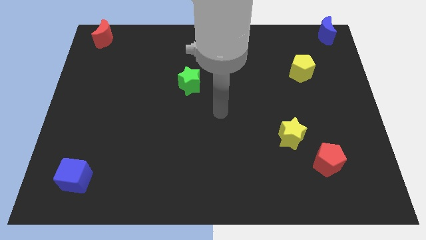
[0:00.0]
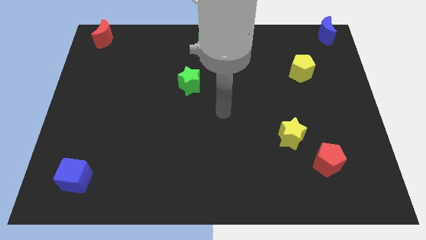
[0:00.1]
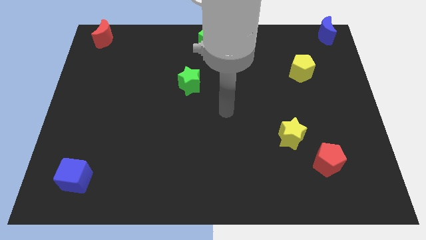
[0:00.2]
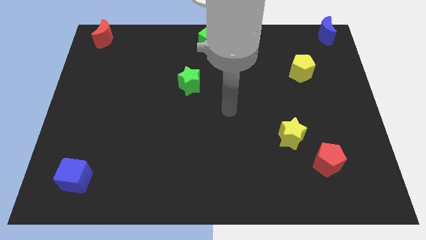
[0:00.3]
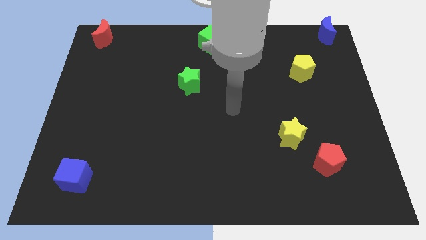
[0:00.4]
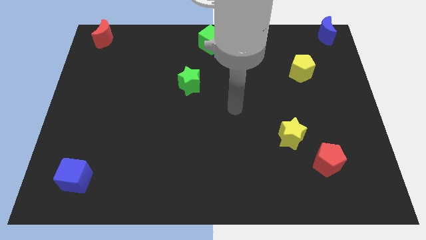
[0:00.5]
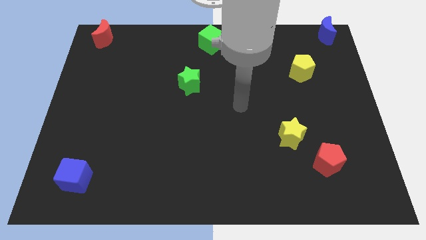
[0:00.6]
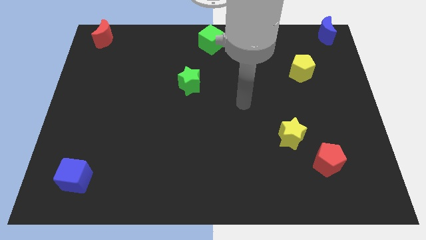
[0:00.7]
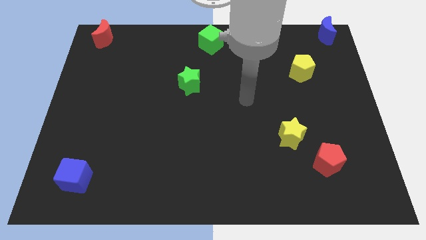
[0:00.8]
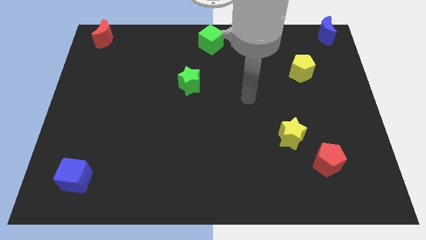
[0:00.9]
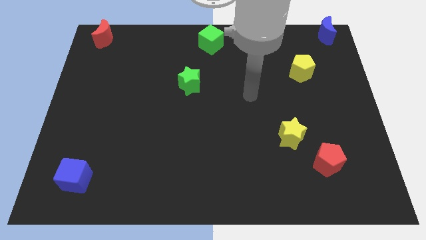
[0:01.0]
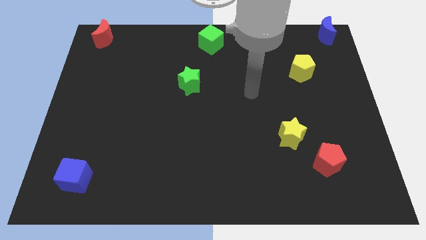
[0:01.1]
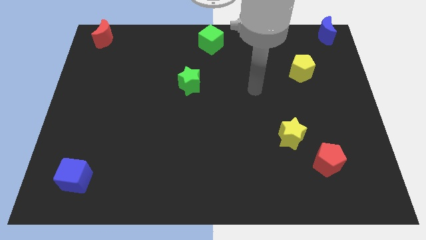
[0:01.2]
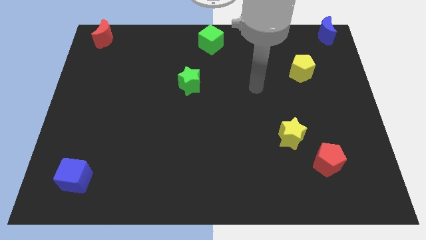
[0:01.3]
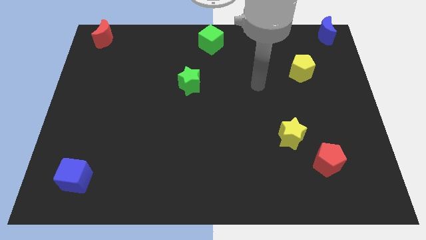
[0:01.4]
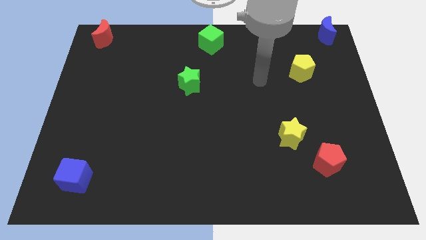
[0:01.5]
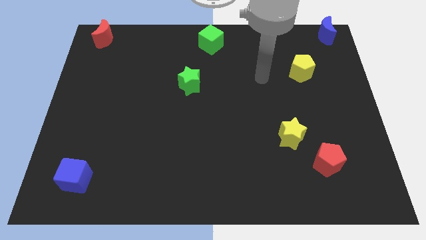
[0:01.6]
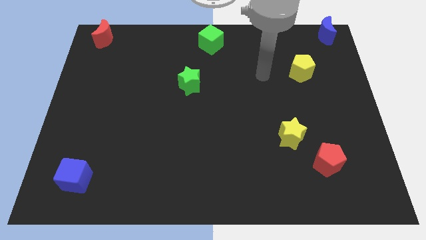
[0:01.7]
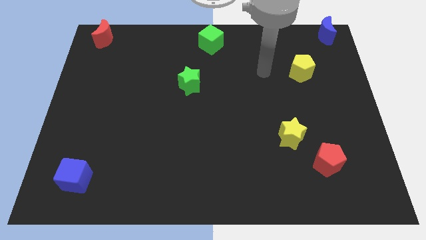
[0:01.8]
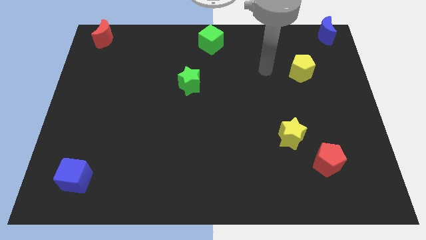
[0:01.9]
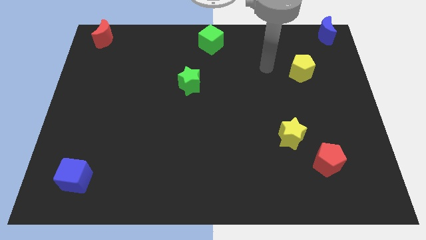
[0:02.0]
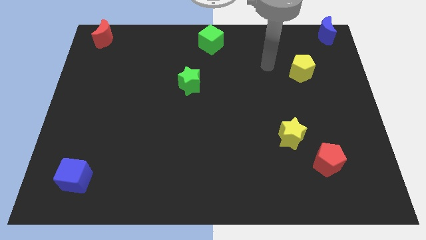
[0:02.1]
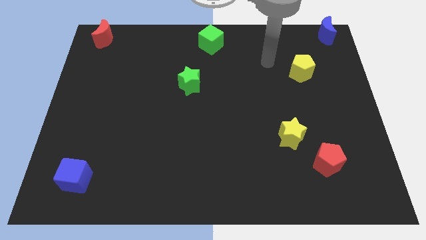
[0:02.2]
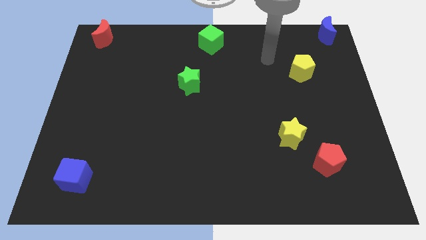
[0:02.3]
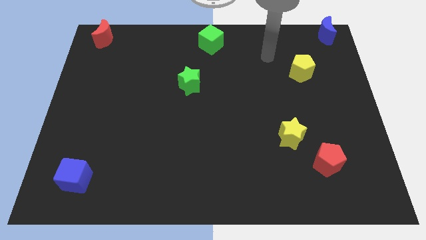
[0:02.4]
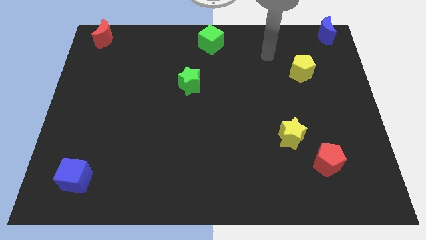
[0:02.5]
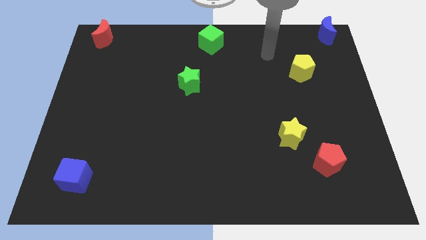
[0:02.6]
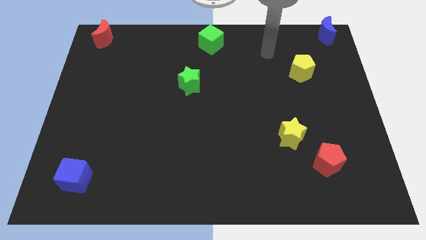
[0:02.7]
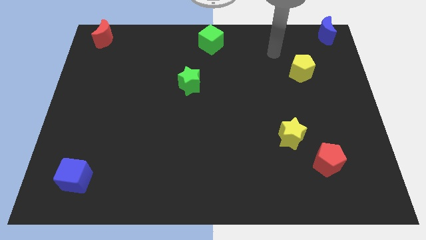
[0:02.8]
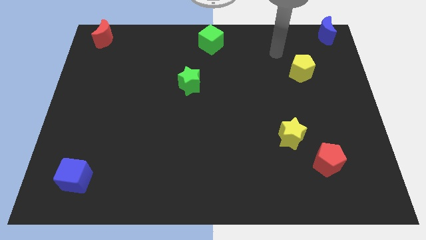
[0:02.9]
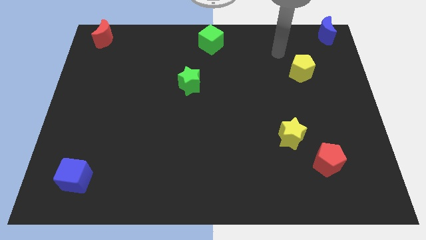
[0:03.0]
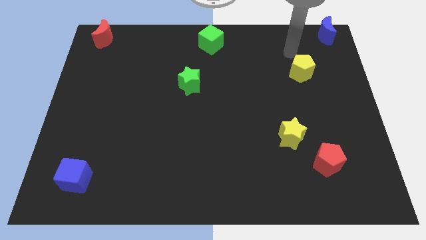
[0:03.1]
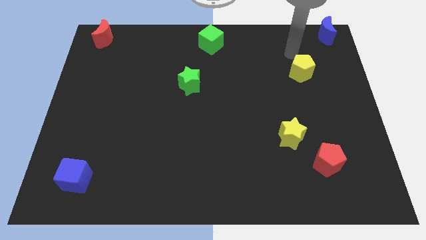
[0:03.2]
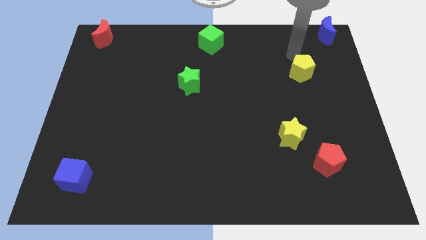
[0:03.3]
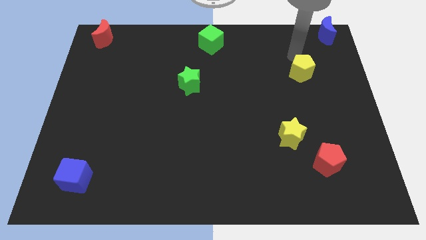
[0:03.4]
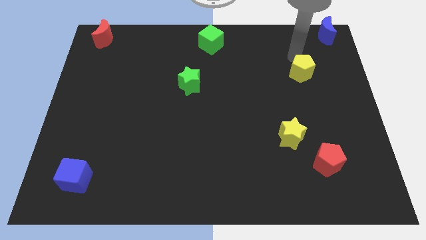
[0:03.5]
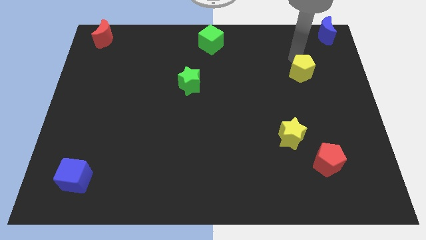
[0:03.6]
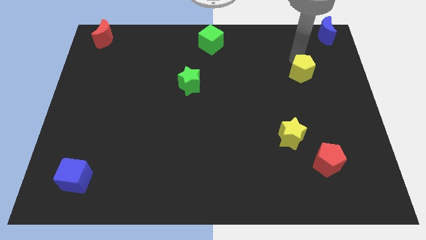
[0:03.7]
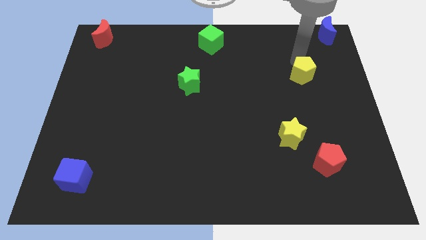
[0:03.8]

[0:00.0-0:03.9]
place the arm near the yellow pentagon

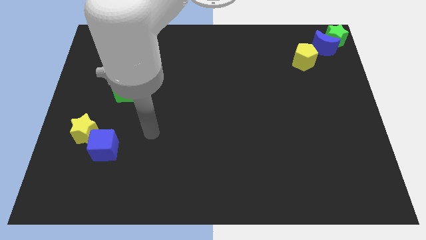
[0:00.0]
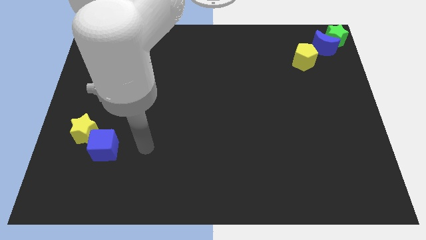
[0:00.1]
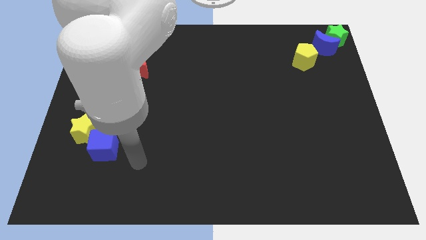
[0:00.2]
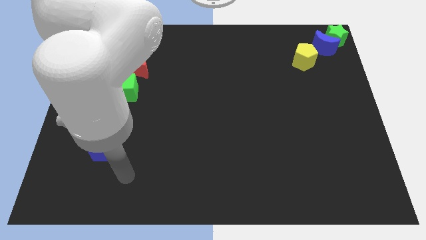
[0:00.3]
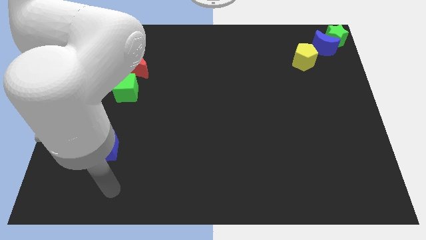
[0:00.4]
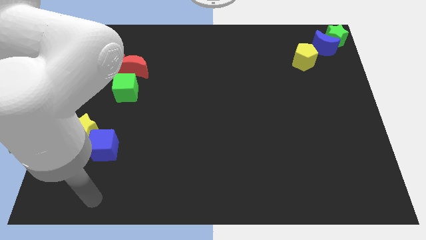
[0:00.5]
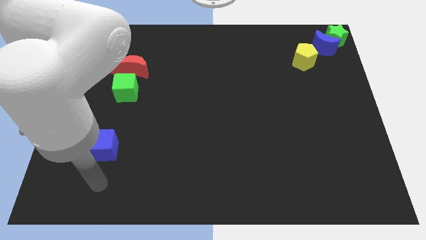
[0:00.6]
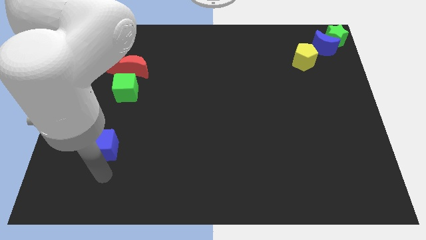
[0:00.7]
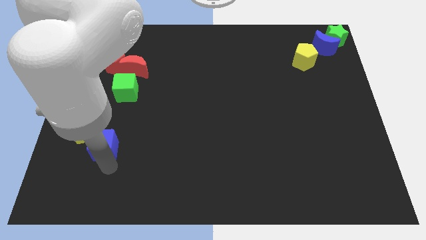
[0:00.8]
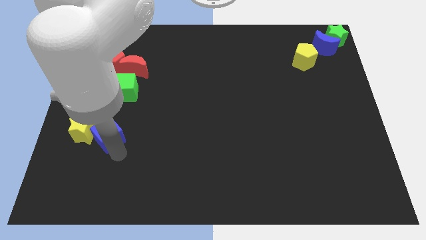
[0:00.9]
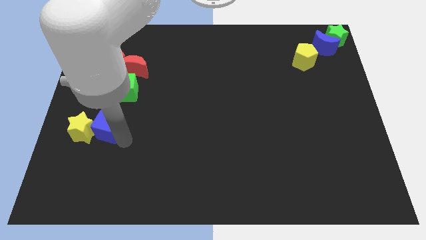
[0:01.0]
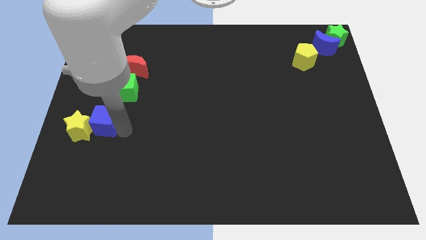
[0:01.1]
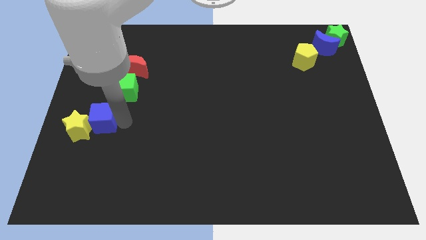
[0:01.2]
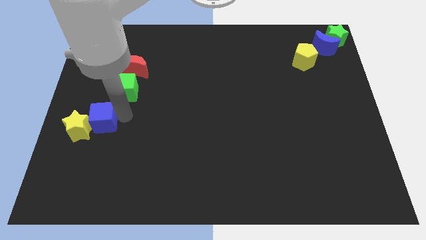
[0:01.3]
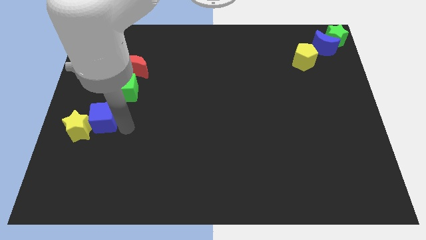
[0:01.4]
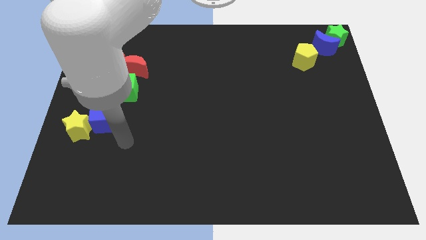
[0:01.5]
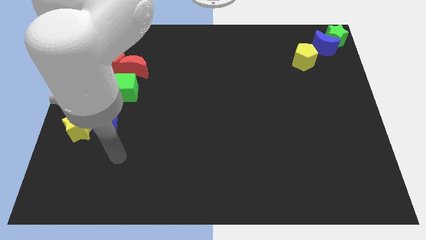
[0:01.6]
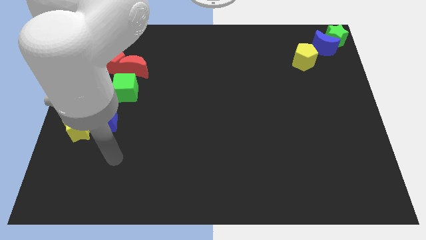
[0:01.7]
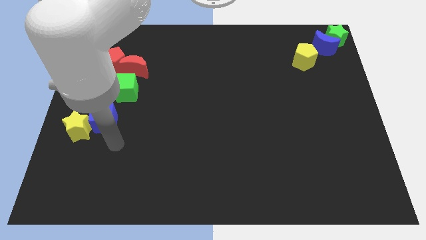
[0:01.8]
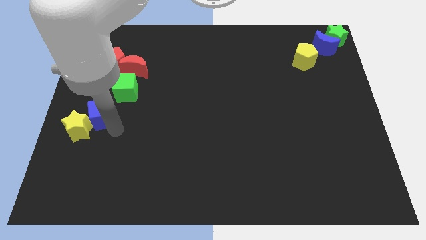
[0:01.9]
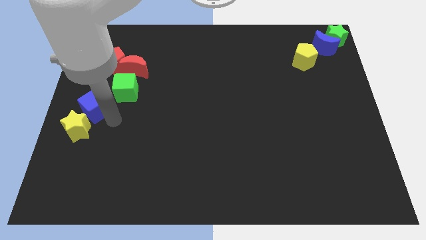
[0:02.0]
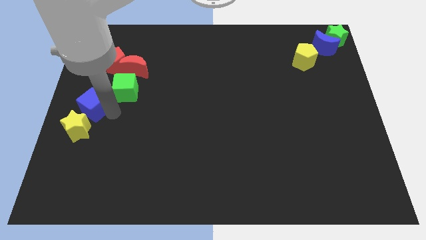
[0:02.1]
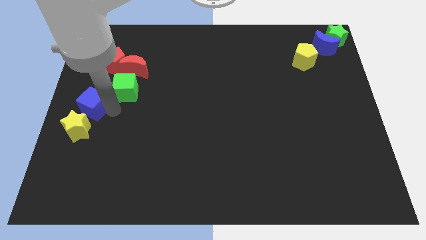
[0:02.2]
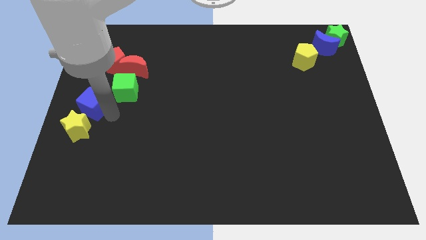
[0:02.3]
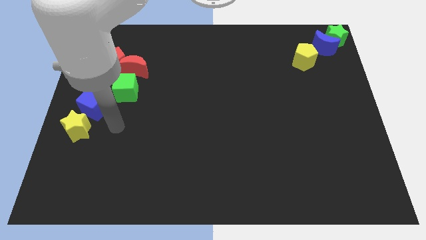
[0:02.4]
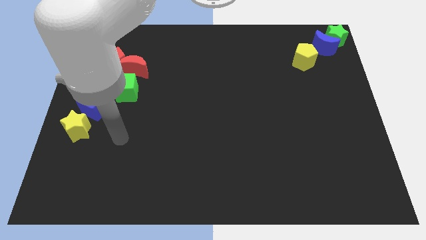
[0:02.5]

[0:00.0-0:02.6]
move the blue cube above the yellow star

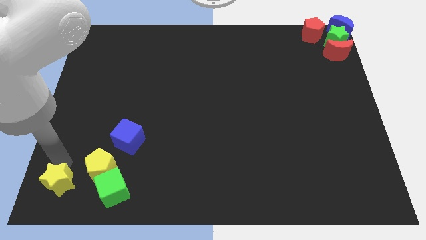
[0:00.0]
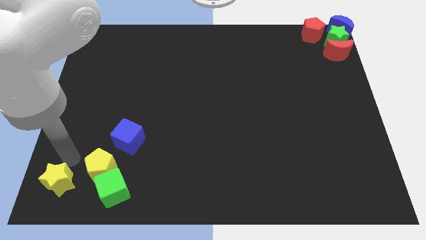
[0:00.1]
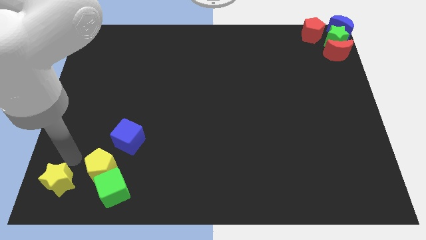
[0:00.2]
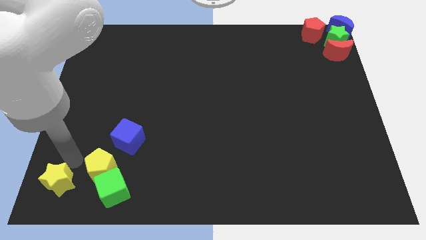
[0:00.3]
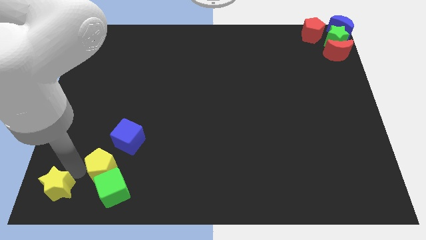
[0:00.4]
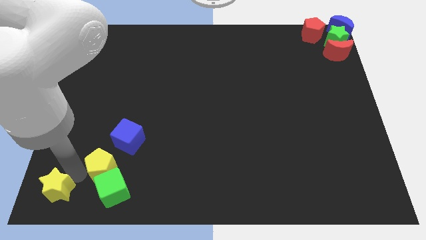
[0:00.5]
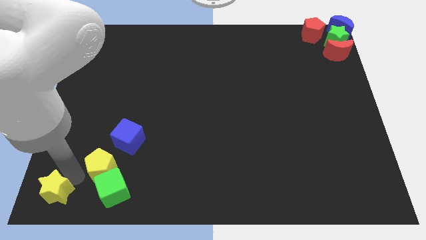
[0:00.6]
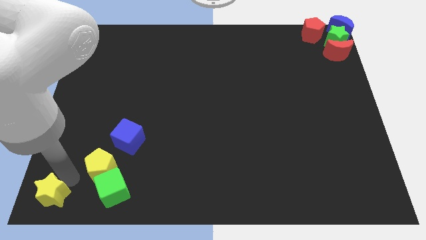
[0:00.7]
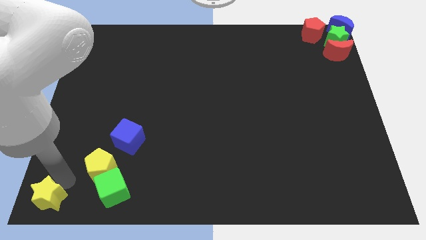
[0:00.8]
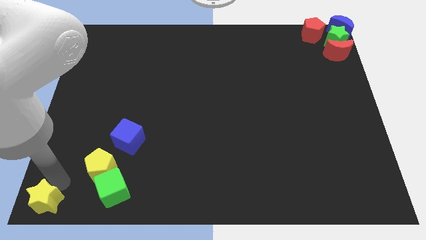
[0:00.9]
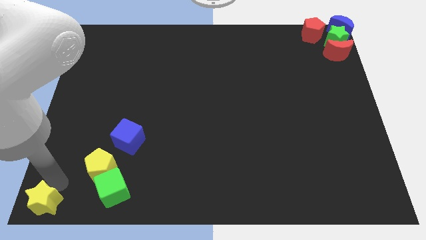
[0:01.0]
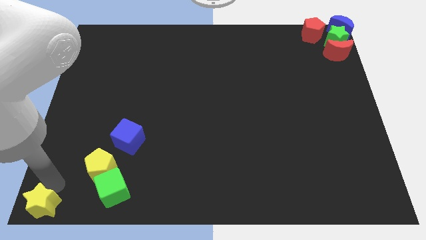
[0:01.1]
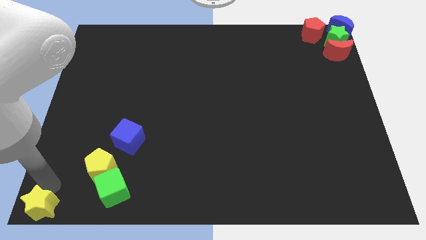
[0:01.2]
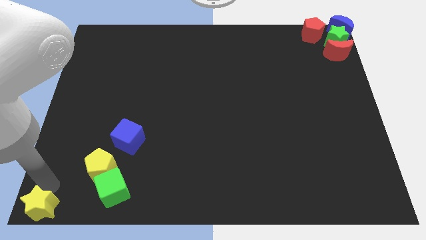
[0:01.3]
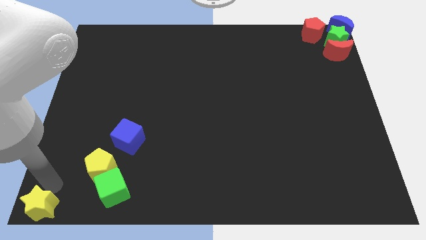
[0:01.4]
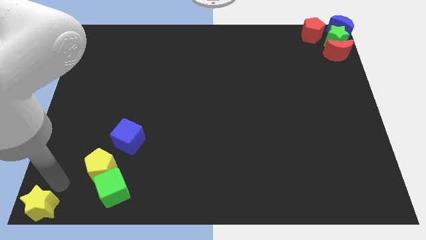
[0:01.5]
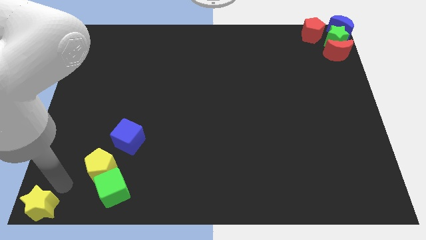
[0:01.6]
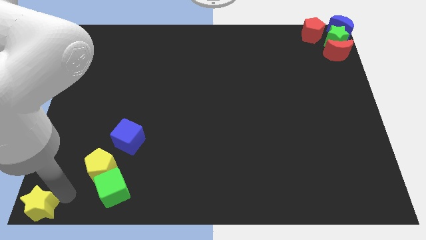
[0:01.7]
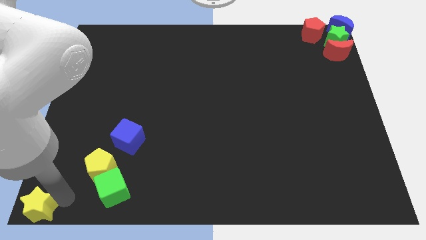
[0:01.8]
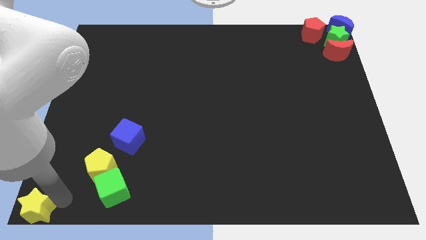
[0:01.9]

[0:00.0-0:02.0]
place the yellow star at the bottom left corner

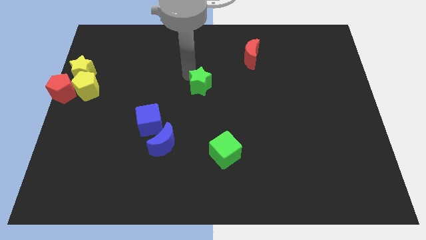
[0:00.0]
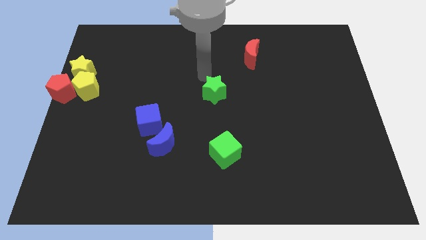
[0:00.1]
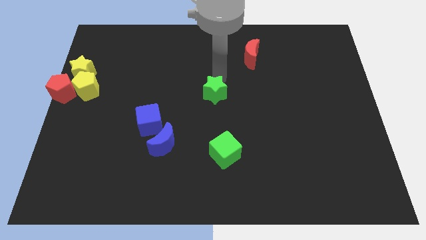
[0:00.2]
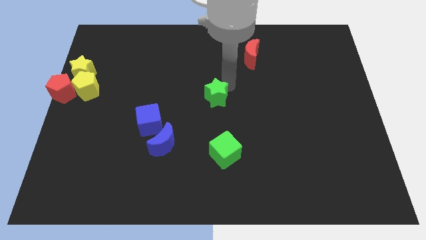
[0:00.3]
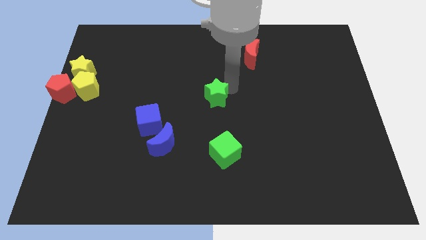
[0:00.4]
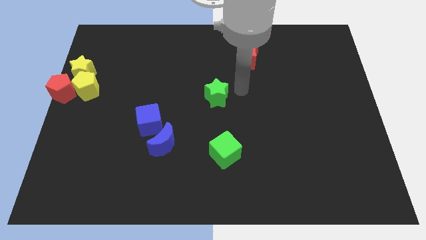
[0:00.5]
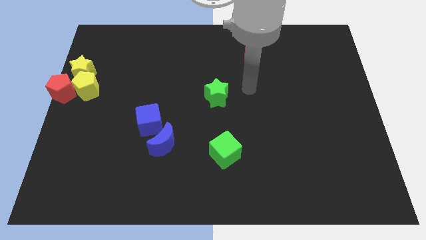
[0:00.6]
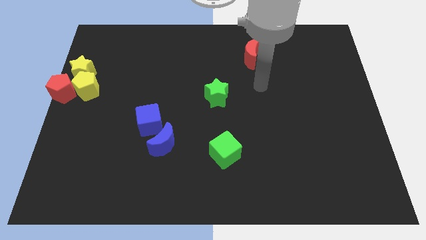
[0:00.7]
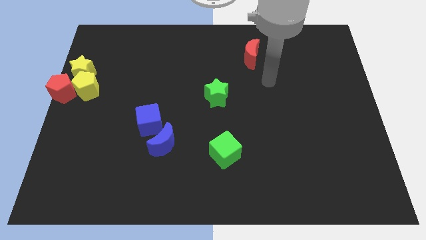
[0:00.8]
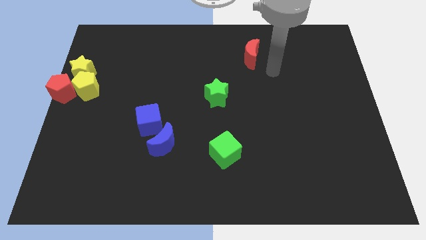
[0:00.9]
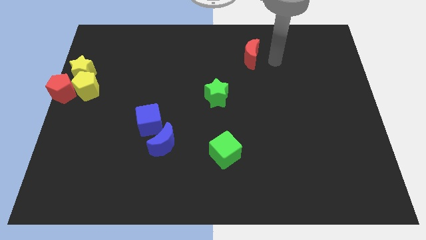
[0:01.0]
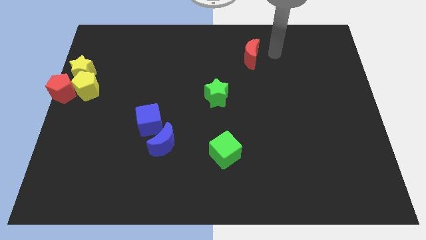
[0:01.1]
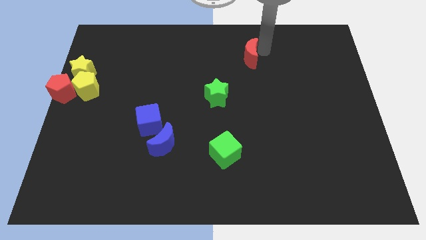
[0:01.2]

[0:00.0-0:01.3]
place the green star at the center of the board
